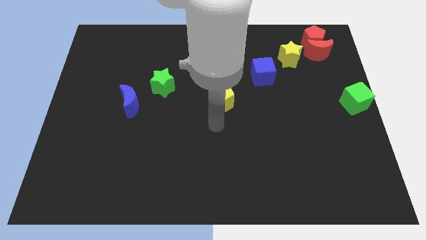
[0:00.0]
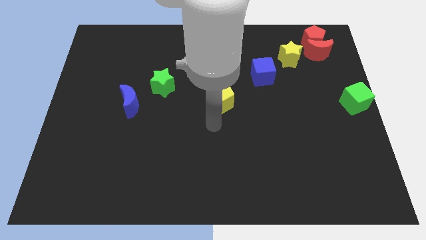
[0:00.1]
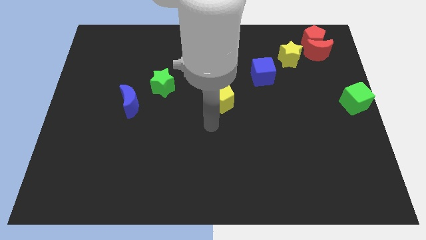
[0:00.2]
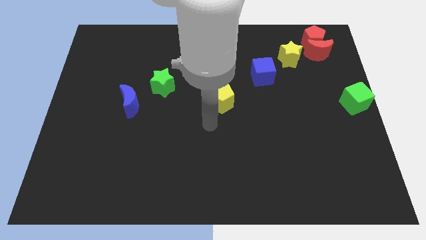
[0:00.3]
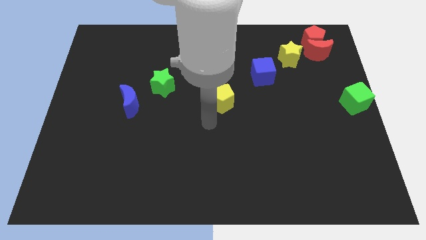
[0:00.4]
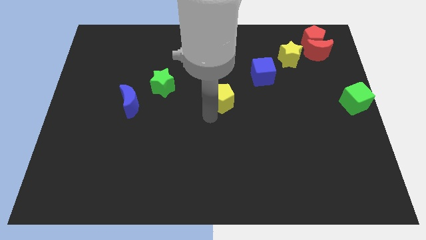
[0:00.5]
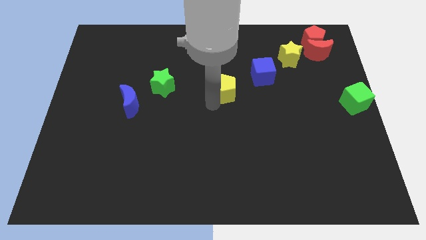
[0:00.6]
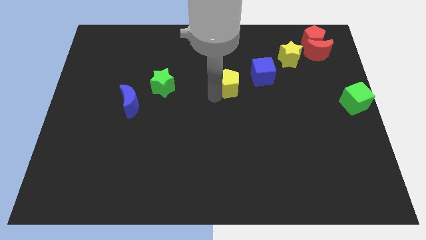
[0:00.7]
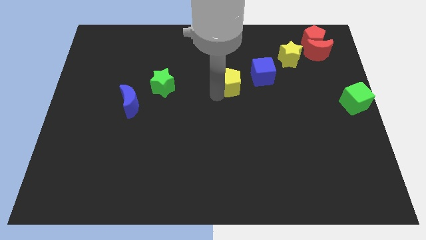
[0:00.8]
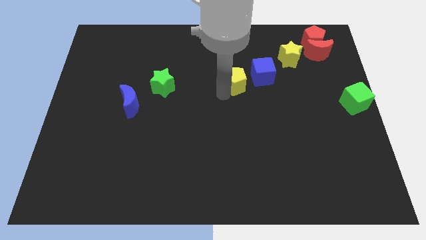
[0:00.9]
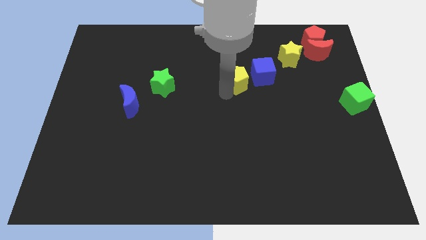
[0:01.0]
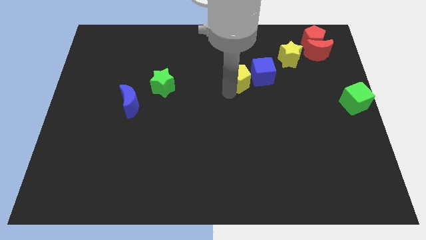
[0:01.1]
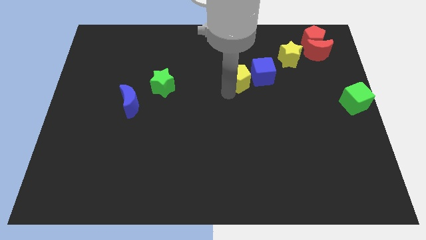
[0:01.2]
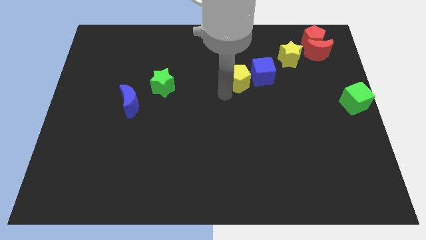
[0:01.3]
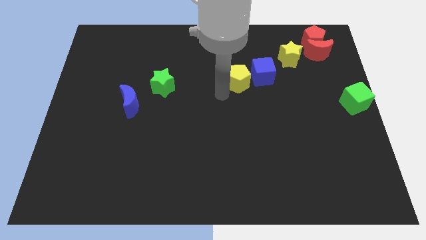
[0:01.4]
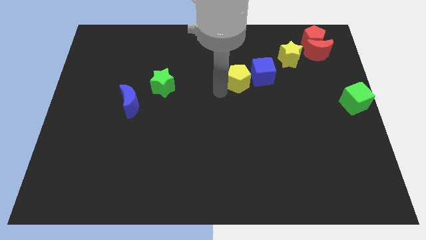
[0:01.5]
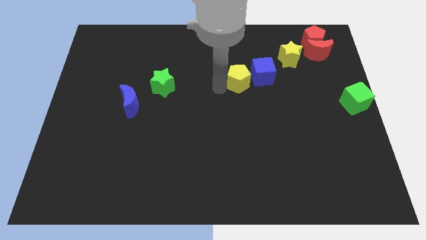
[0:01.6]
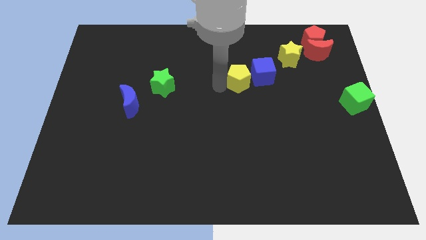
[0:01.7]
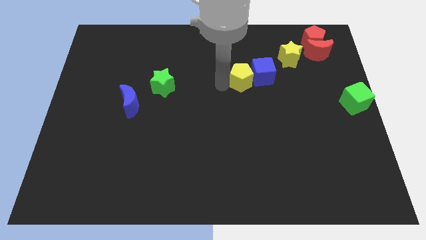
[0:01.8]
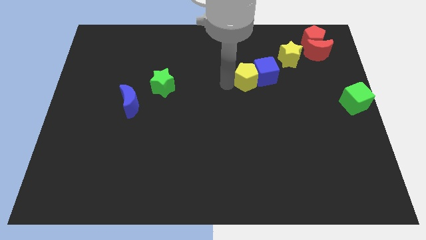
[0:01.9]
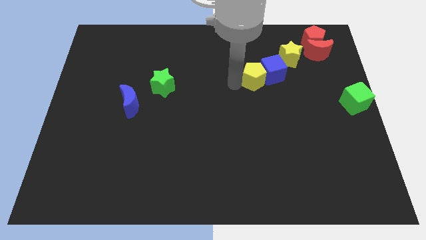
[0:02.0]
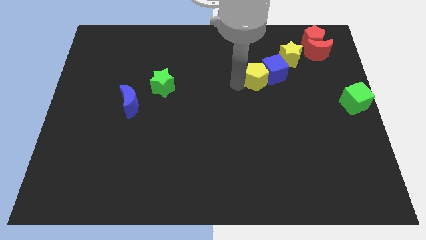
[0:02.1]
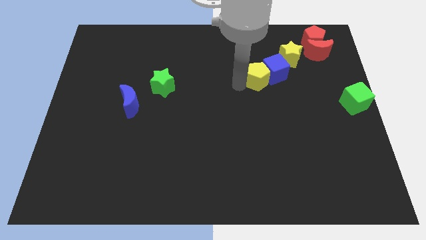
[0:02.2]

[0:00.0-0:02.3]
push the yellow pentagon into the blue cube

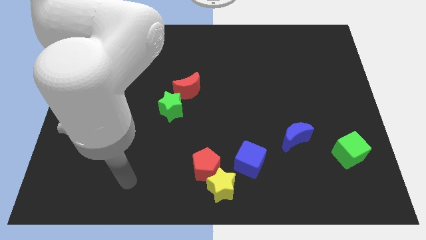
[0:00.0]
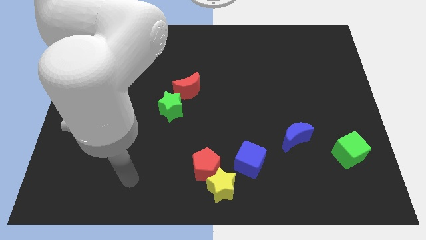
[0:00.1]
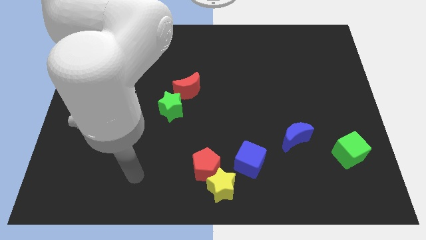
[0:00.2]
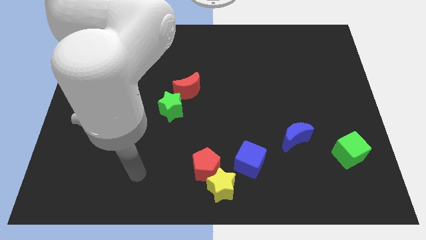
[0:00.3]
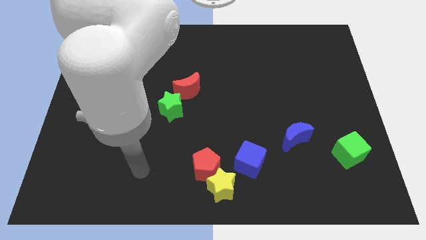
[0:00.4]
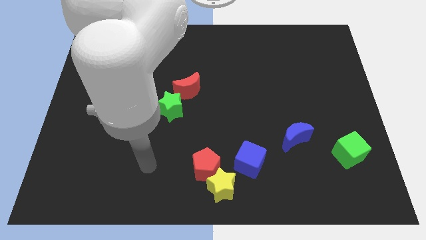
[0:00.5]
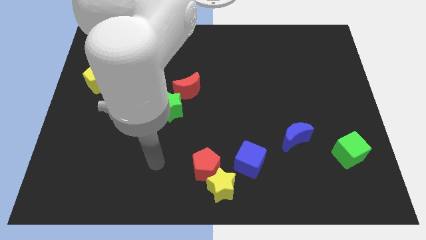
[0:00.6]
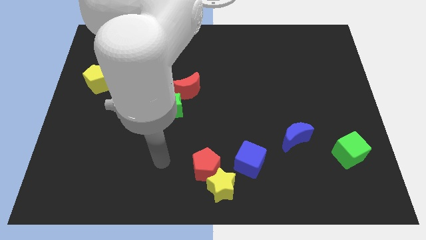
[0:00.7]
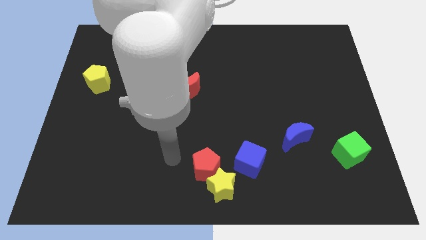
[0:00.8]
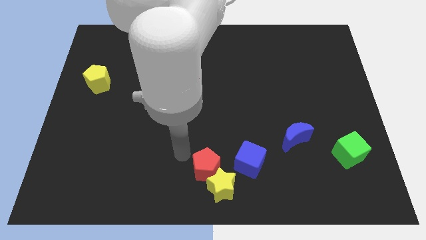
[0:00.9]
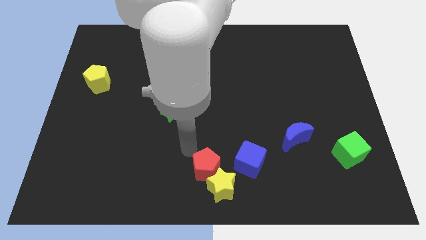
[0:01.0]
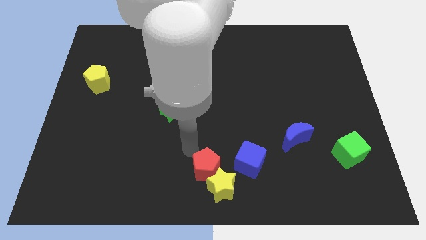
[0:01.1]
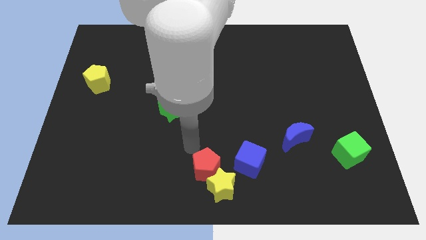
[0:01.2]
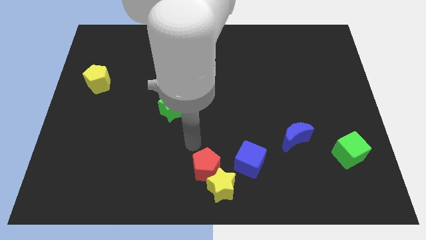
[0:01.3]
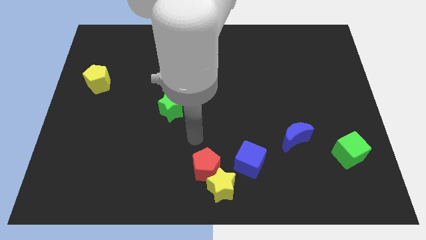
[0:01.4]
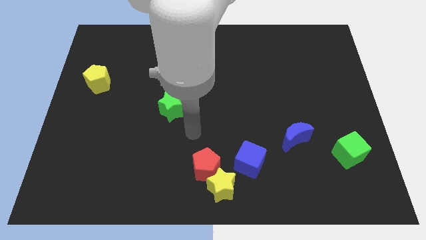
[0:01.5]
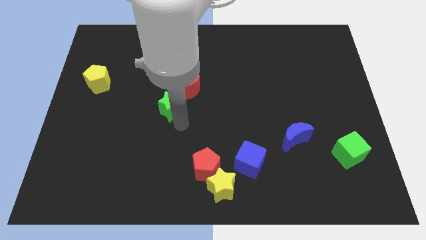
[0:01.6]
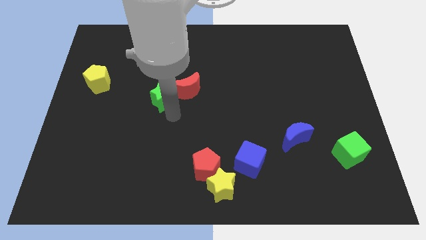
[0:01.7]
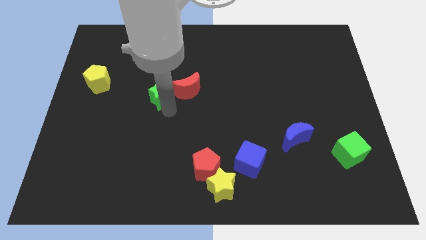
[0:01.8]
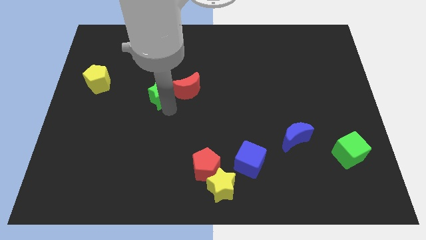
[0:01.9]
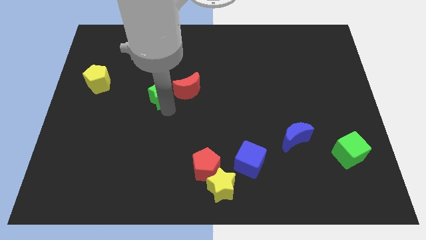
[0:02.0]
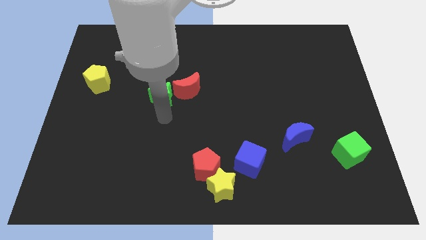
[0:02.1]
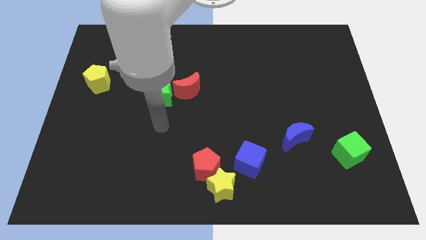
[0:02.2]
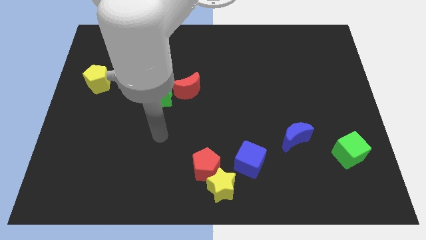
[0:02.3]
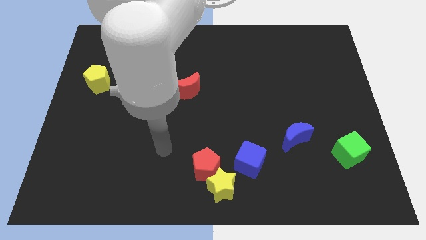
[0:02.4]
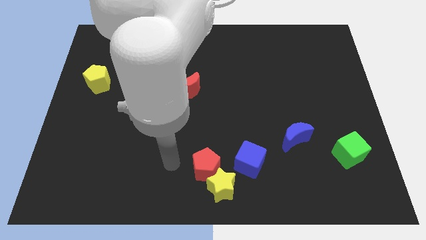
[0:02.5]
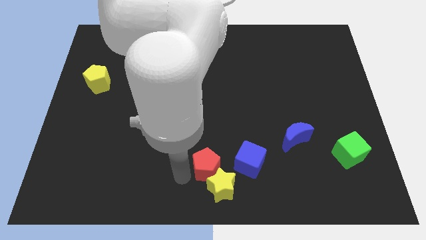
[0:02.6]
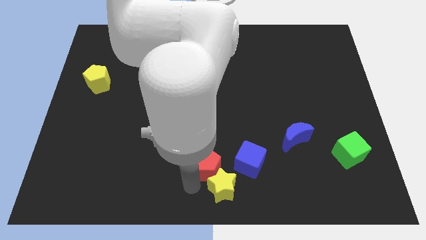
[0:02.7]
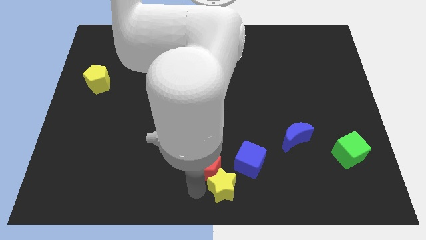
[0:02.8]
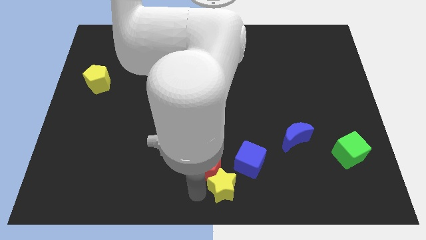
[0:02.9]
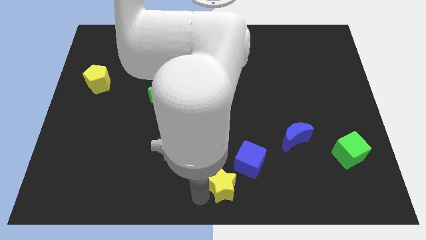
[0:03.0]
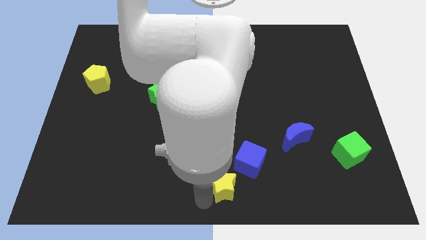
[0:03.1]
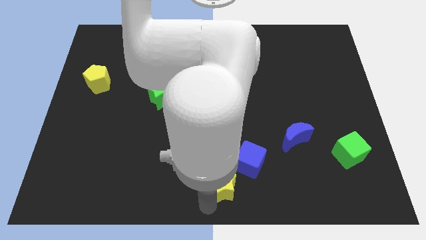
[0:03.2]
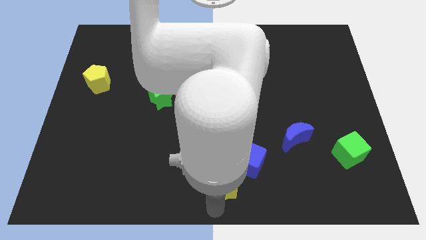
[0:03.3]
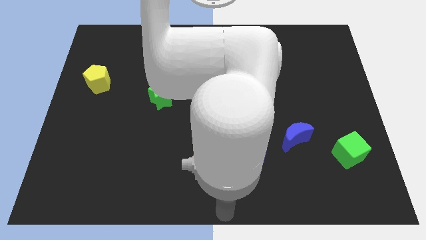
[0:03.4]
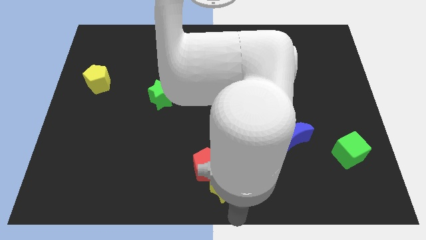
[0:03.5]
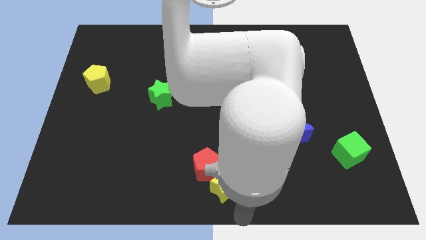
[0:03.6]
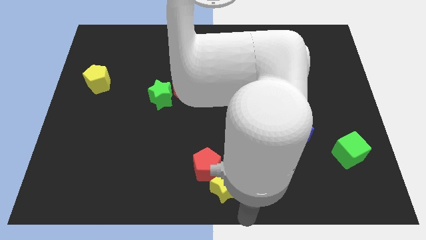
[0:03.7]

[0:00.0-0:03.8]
place your arm below to the yellow star

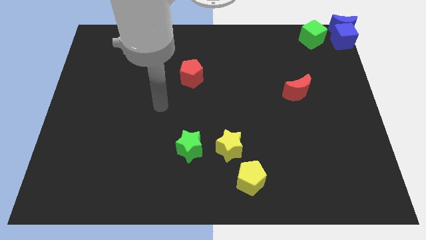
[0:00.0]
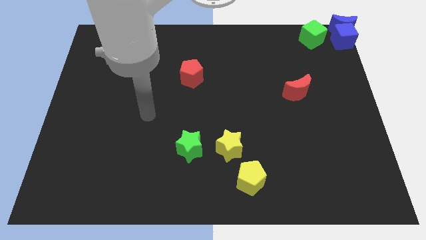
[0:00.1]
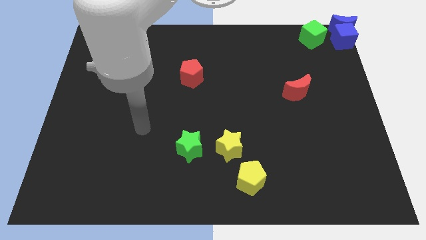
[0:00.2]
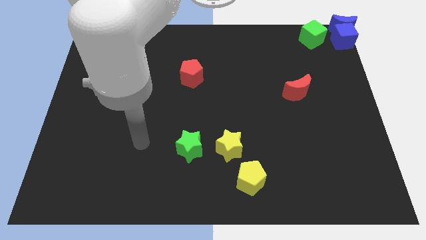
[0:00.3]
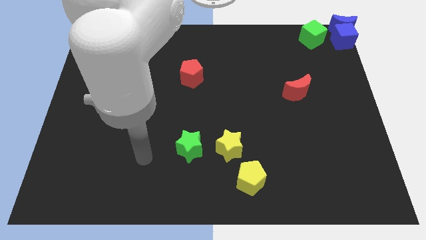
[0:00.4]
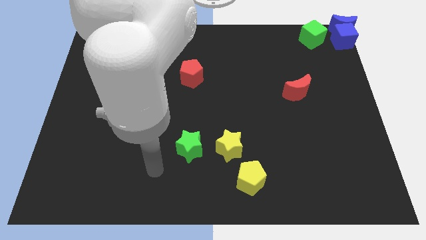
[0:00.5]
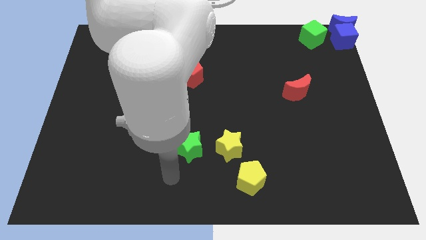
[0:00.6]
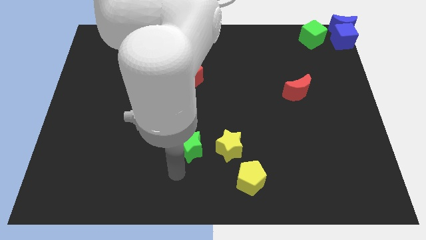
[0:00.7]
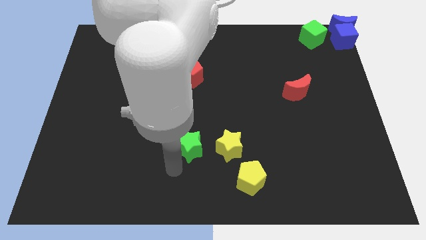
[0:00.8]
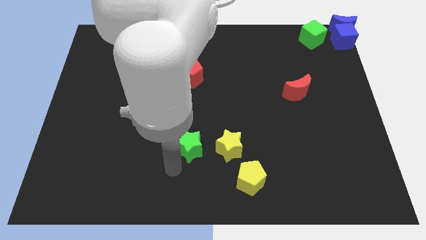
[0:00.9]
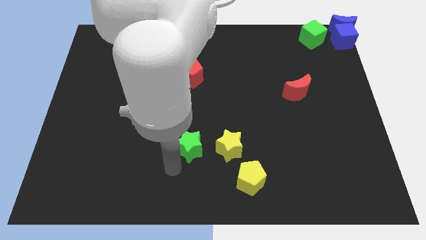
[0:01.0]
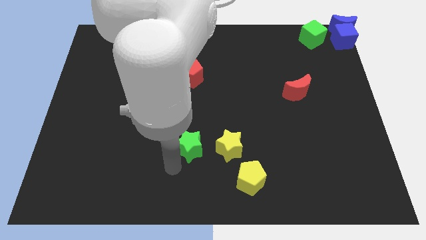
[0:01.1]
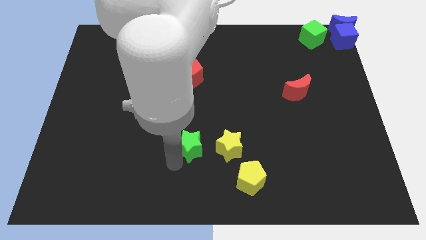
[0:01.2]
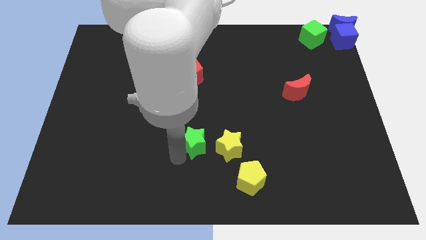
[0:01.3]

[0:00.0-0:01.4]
touch the bottom of green star

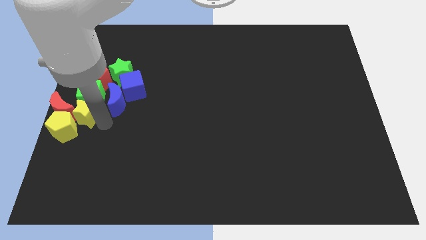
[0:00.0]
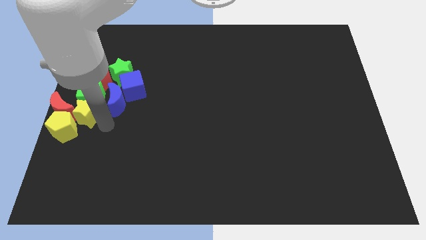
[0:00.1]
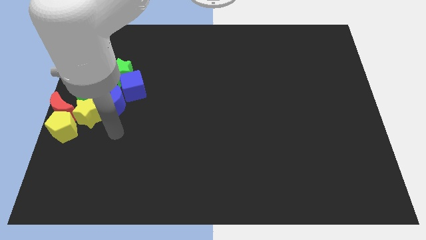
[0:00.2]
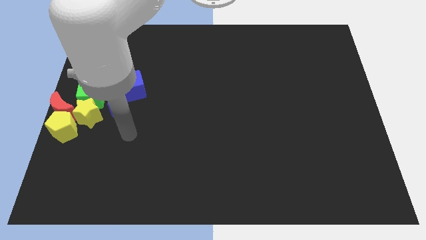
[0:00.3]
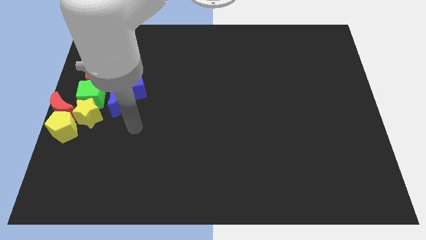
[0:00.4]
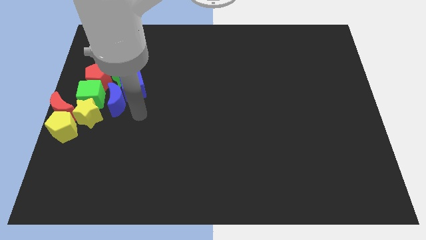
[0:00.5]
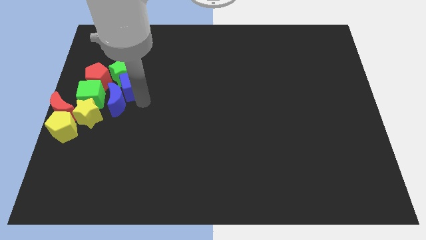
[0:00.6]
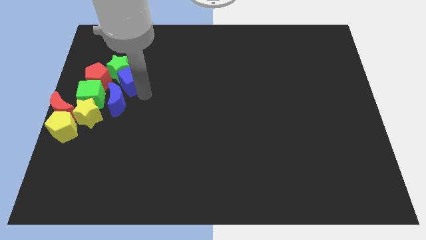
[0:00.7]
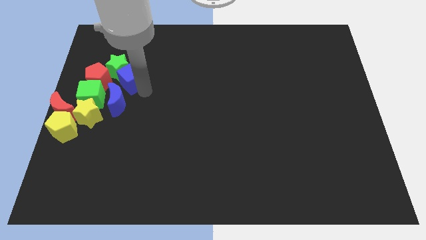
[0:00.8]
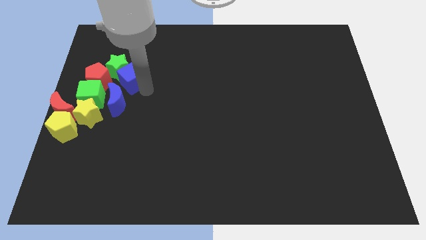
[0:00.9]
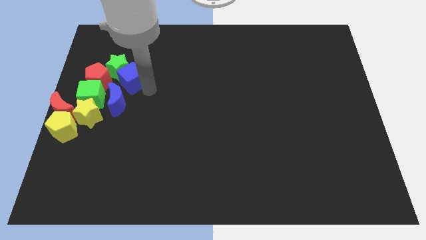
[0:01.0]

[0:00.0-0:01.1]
move your arm away from yellow star

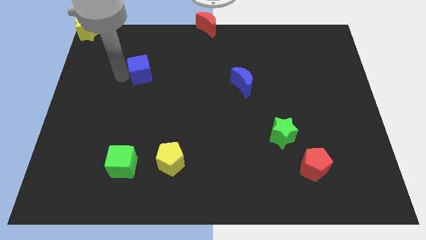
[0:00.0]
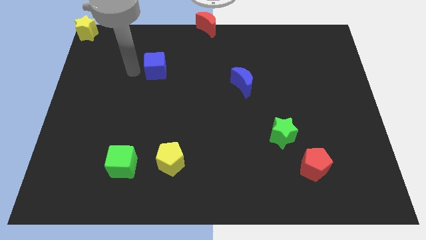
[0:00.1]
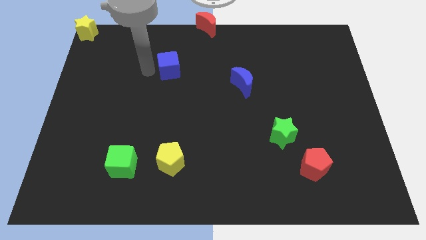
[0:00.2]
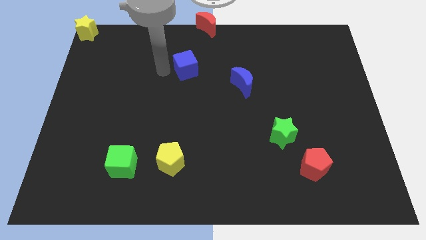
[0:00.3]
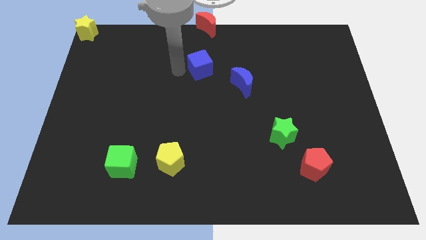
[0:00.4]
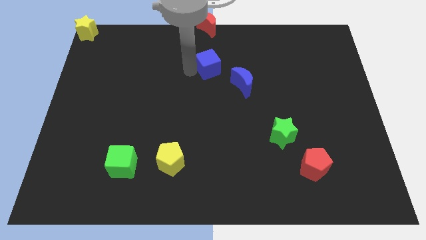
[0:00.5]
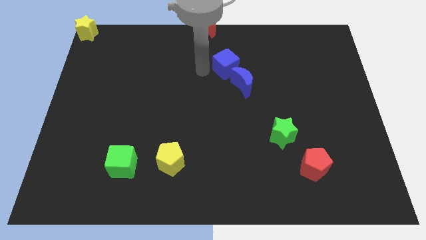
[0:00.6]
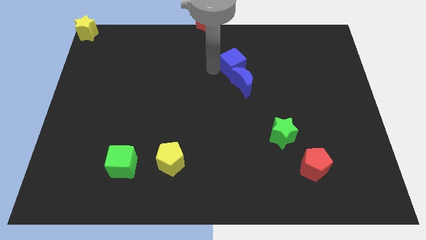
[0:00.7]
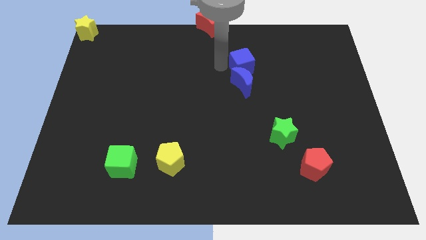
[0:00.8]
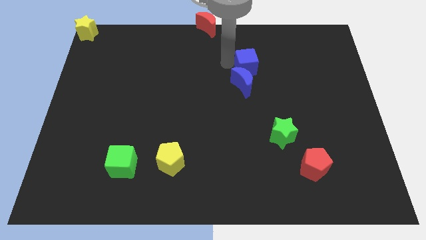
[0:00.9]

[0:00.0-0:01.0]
move the blue cube above the blue crescent
